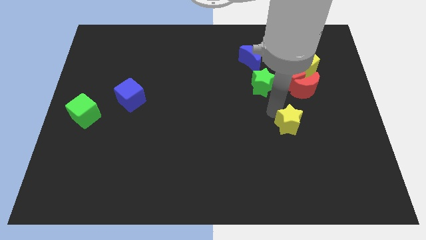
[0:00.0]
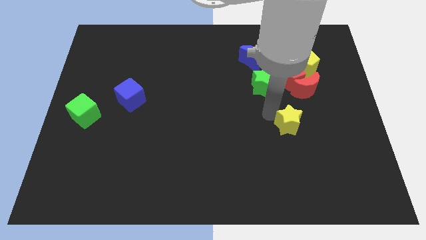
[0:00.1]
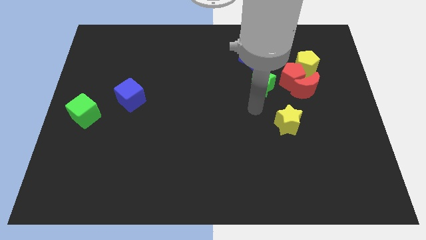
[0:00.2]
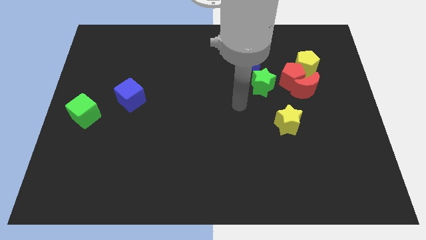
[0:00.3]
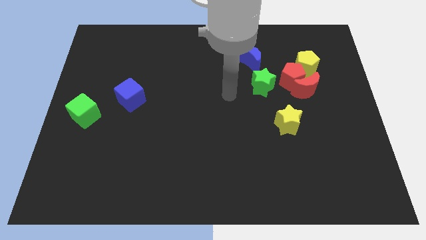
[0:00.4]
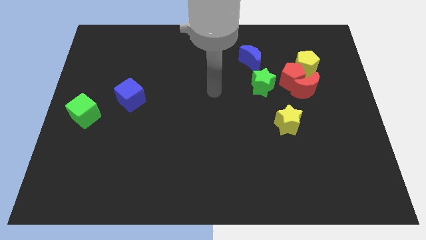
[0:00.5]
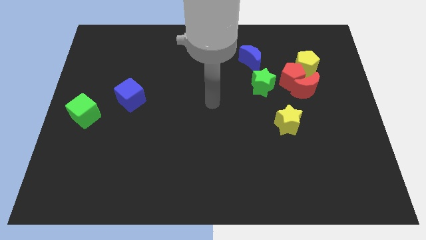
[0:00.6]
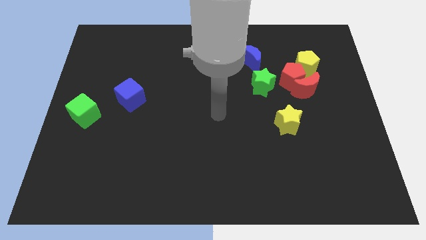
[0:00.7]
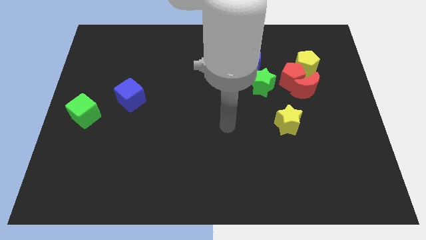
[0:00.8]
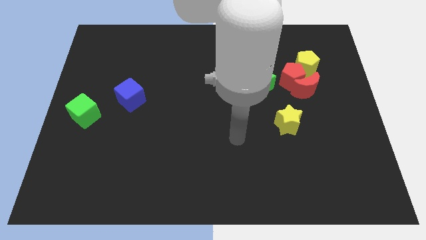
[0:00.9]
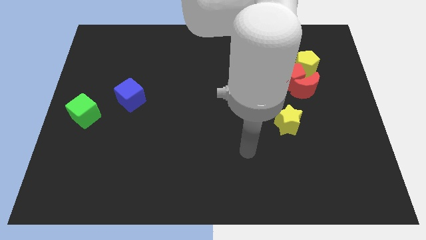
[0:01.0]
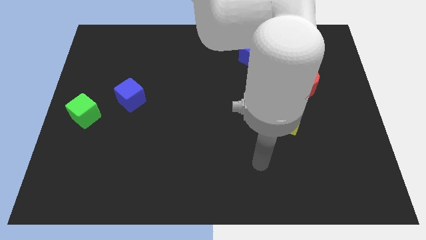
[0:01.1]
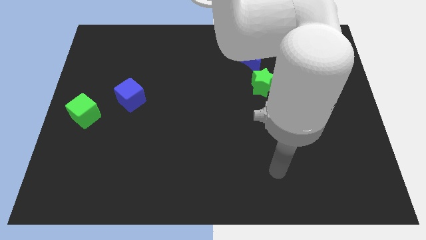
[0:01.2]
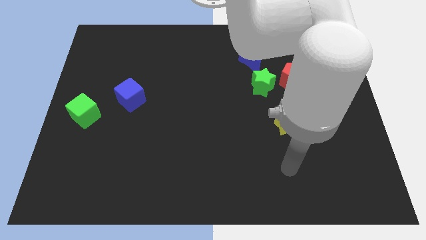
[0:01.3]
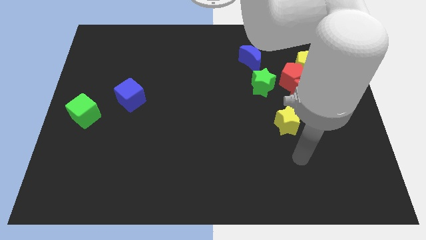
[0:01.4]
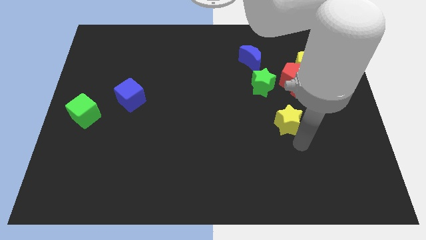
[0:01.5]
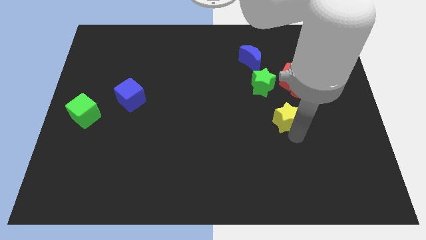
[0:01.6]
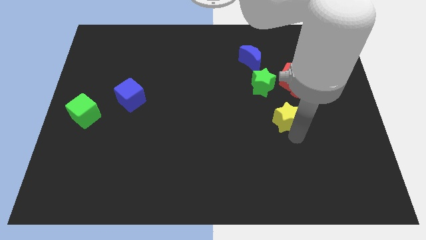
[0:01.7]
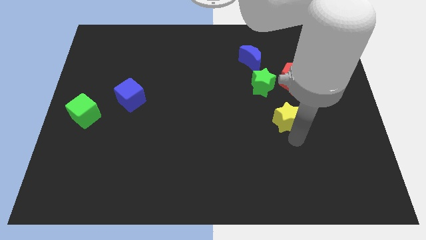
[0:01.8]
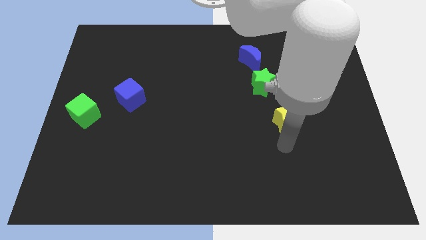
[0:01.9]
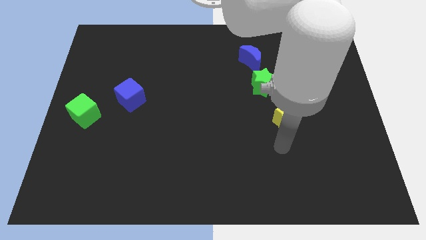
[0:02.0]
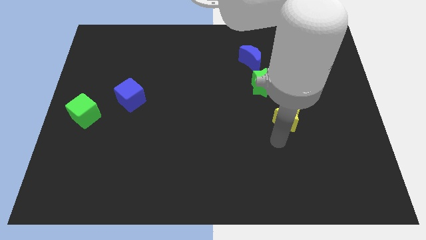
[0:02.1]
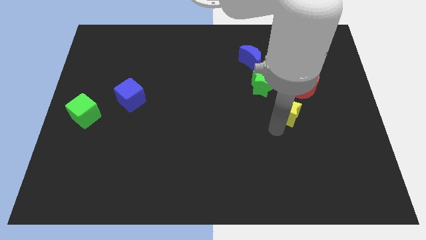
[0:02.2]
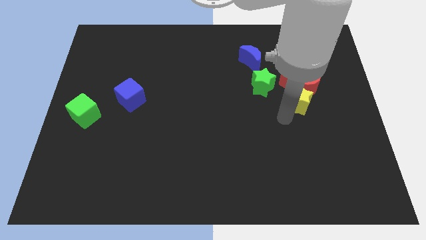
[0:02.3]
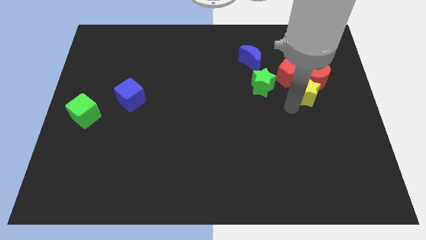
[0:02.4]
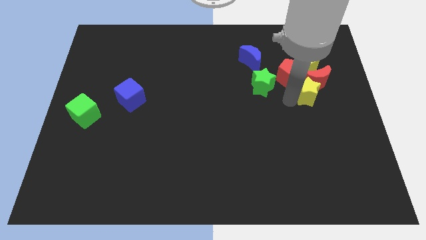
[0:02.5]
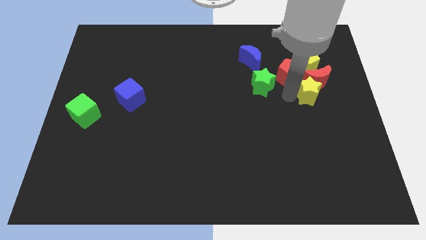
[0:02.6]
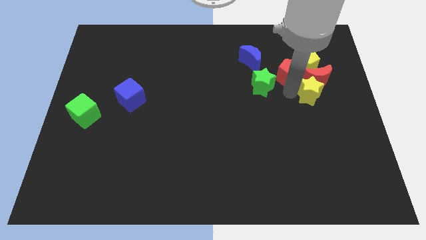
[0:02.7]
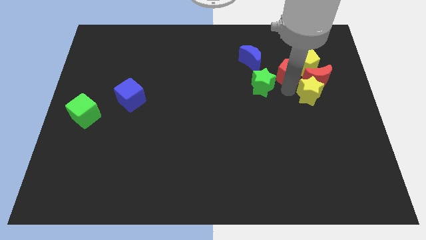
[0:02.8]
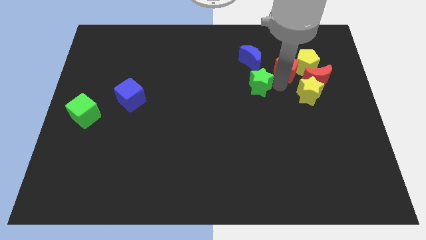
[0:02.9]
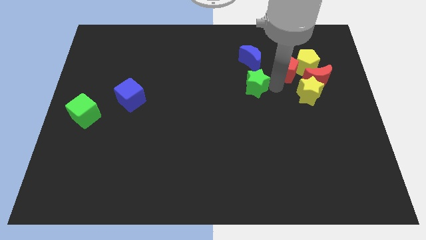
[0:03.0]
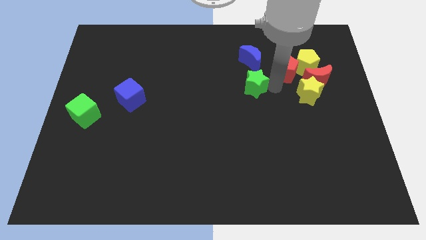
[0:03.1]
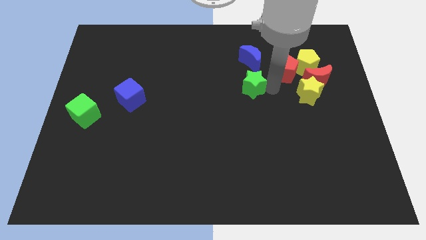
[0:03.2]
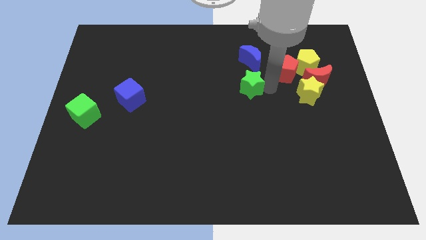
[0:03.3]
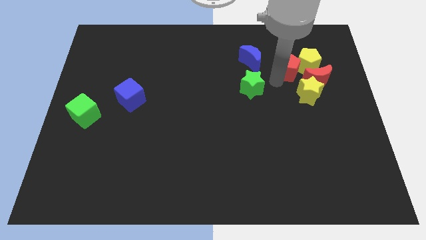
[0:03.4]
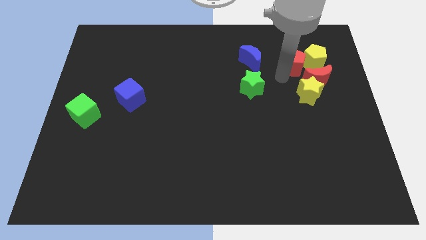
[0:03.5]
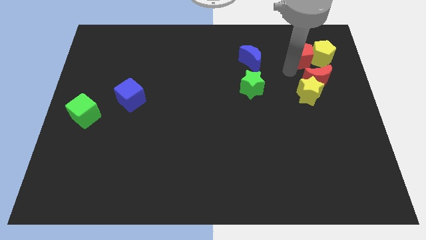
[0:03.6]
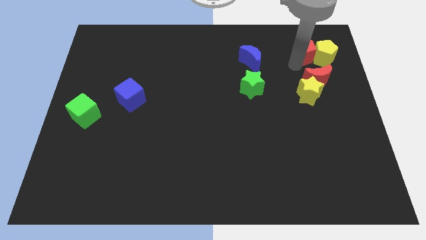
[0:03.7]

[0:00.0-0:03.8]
push the yellow star into the red moon

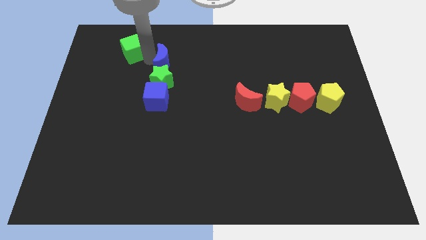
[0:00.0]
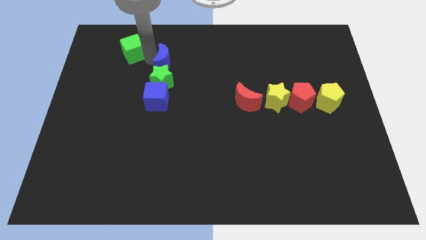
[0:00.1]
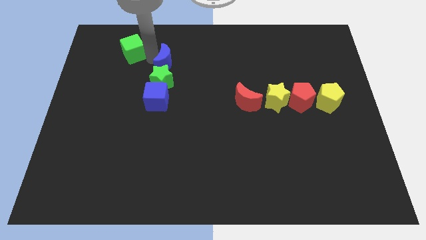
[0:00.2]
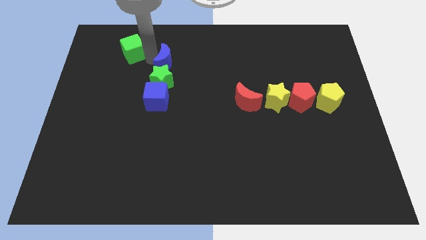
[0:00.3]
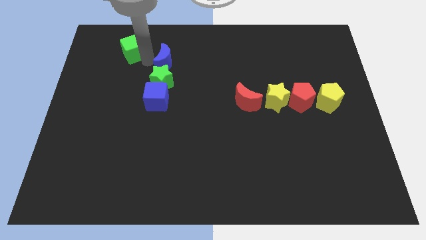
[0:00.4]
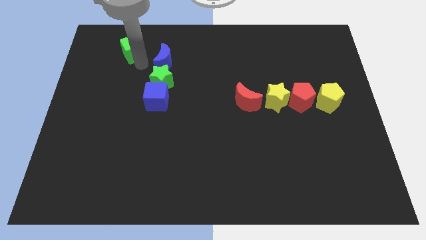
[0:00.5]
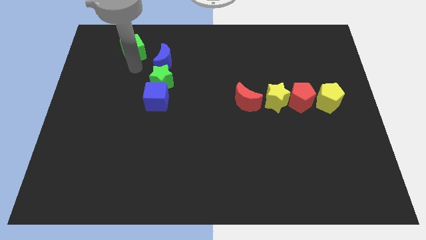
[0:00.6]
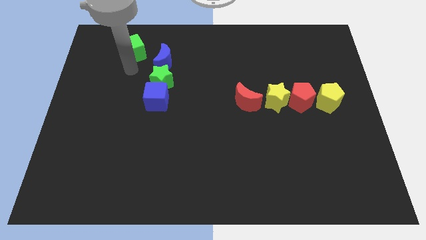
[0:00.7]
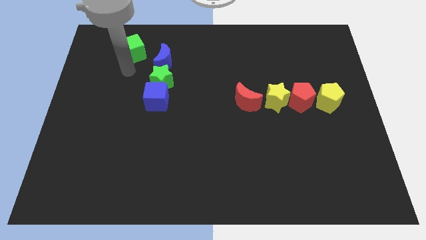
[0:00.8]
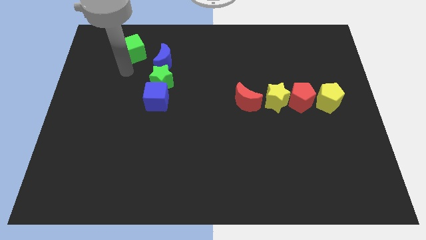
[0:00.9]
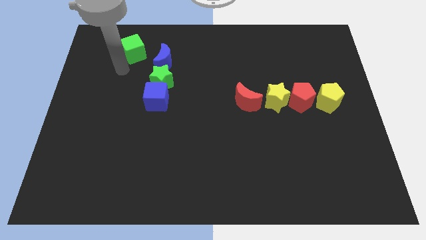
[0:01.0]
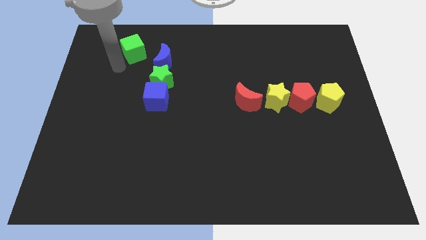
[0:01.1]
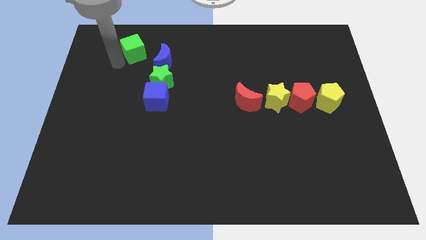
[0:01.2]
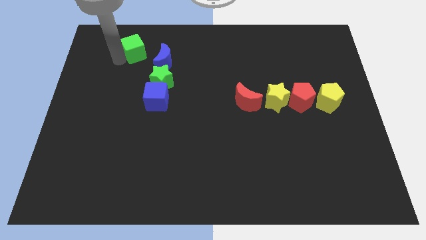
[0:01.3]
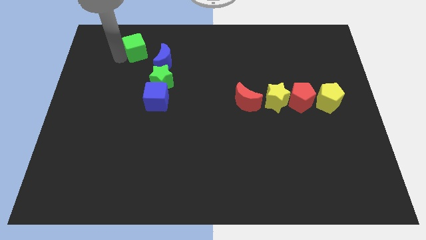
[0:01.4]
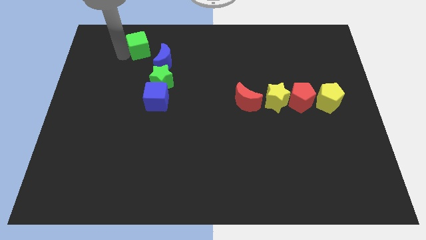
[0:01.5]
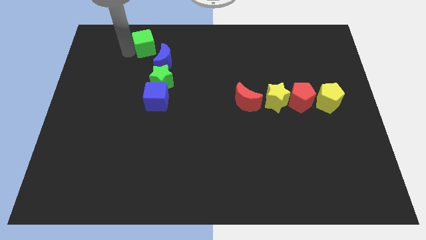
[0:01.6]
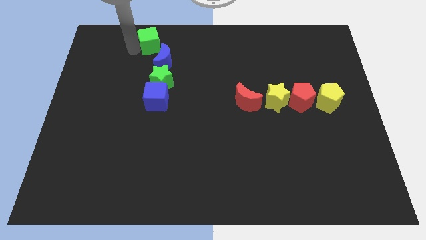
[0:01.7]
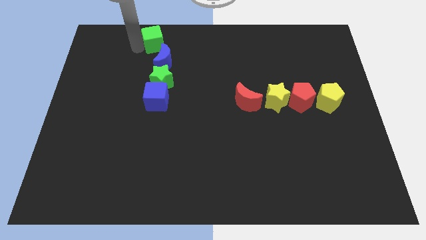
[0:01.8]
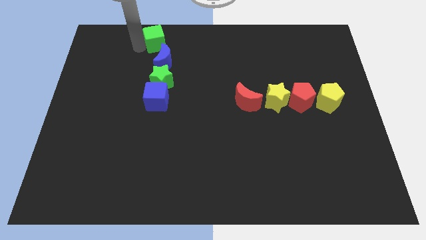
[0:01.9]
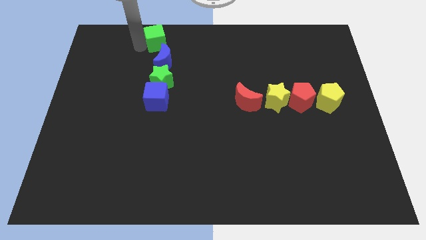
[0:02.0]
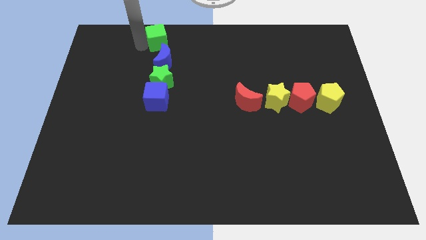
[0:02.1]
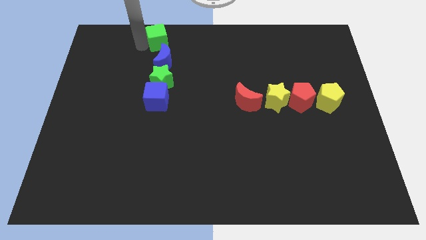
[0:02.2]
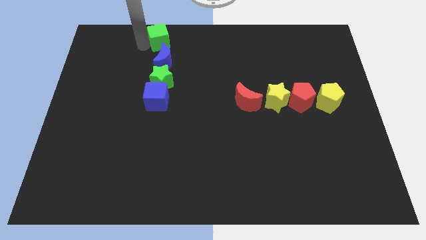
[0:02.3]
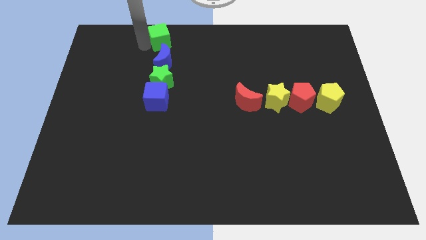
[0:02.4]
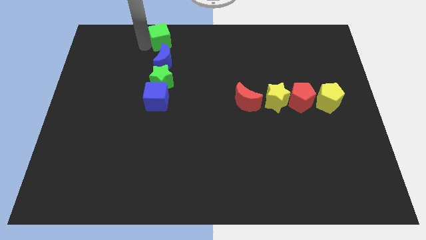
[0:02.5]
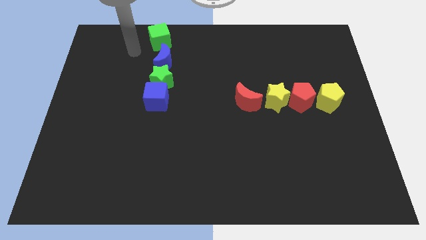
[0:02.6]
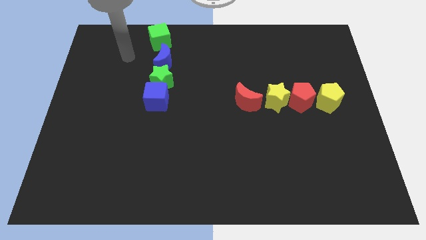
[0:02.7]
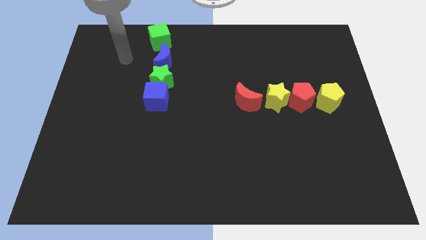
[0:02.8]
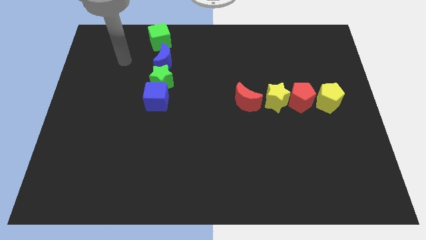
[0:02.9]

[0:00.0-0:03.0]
push the green cube above the blue moon

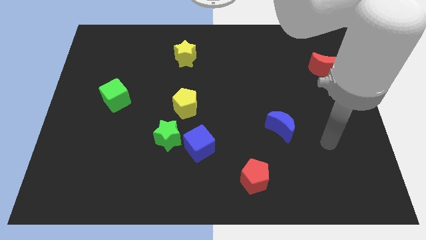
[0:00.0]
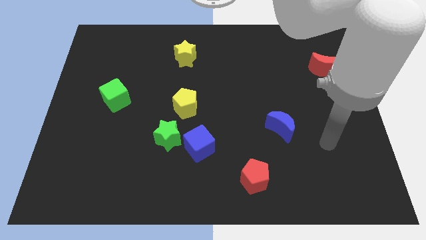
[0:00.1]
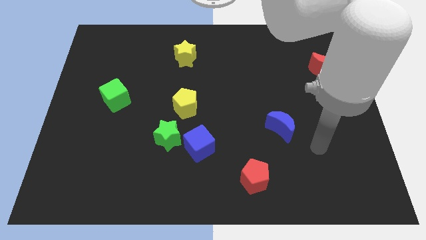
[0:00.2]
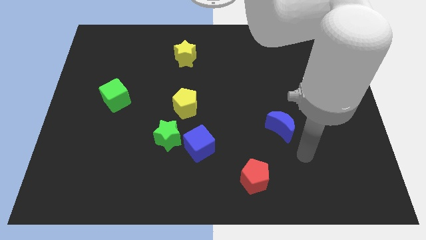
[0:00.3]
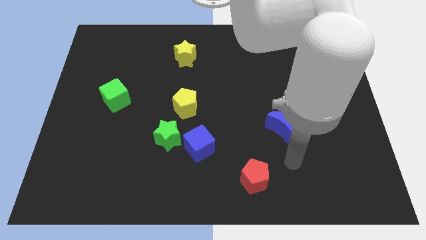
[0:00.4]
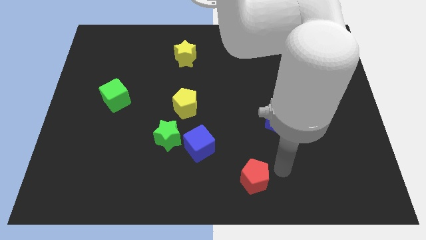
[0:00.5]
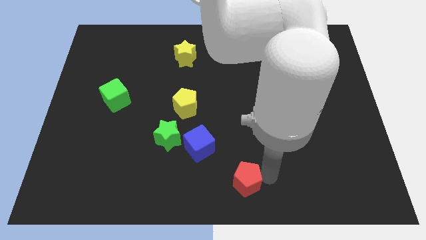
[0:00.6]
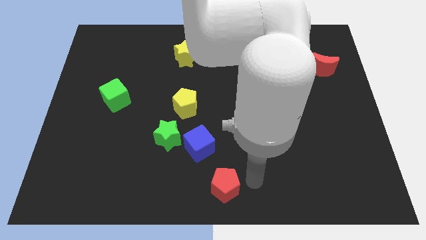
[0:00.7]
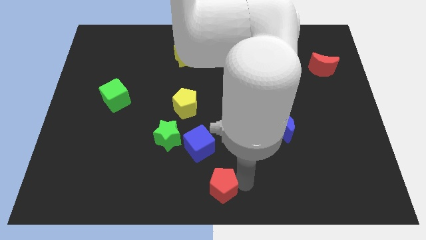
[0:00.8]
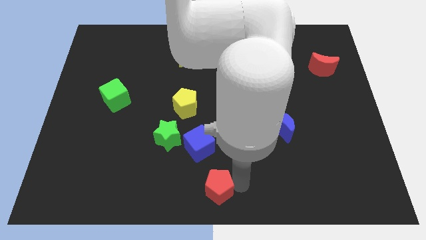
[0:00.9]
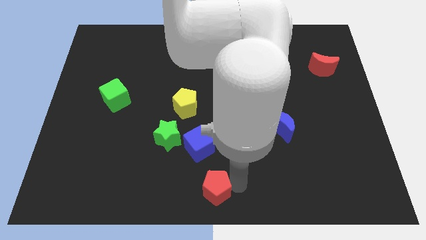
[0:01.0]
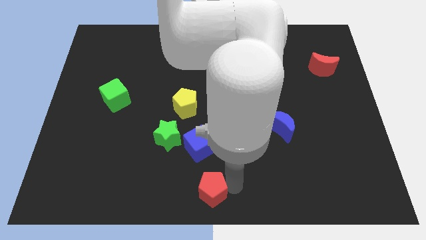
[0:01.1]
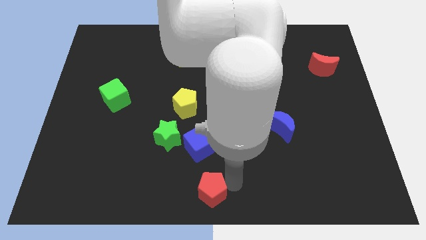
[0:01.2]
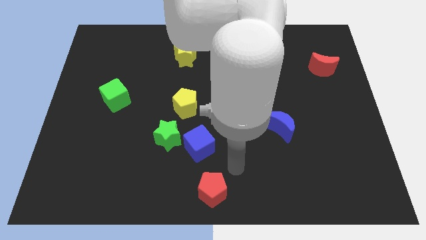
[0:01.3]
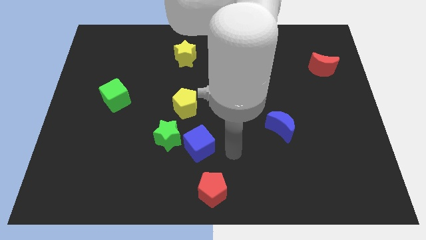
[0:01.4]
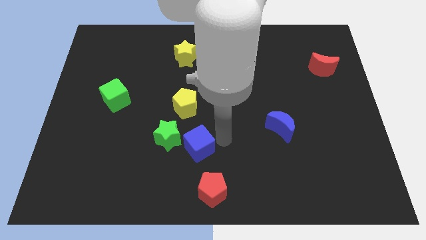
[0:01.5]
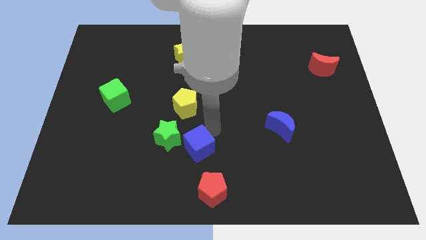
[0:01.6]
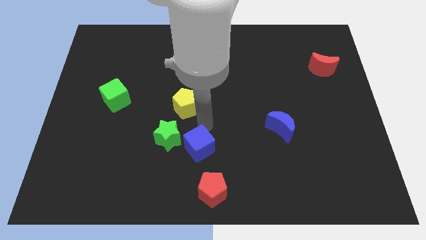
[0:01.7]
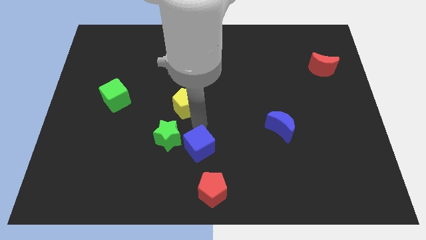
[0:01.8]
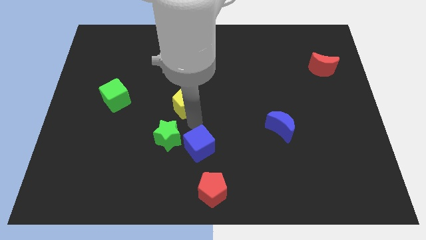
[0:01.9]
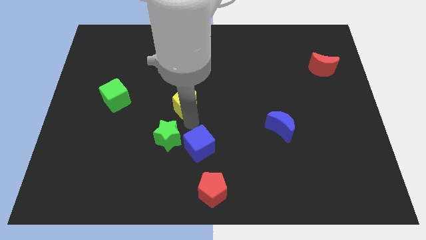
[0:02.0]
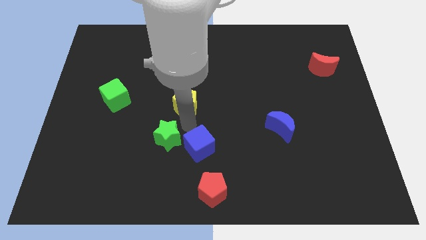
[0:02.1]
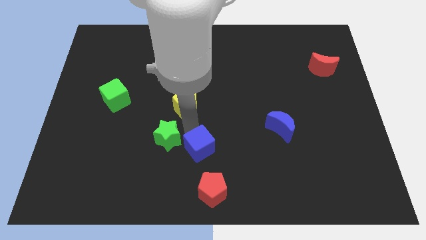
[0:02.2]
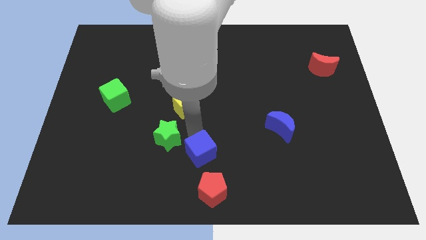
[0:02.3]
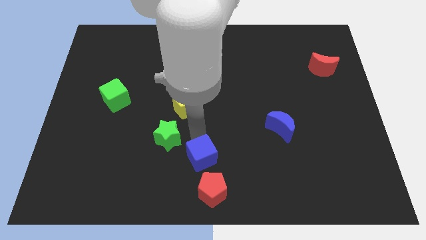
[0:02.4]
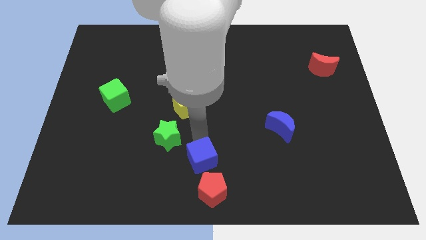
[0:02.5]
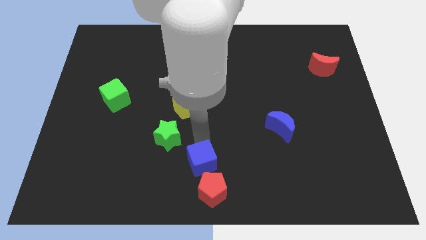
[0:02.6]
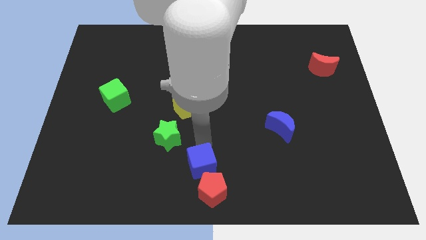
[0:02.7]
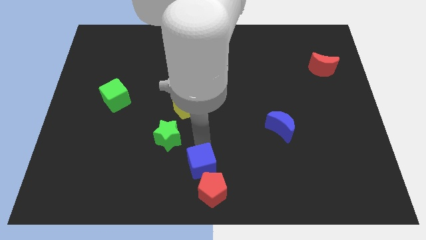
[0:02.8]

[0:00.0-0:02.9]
push the blue cube and red pentagon close to each other
